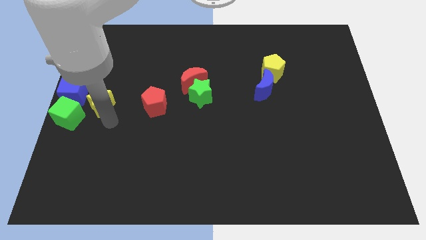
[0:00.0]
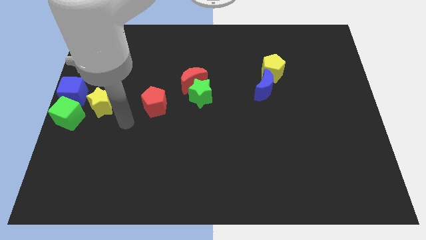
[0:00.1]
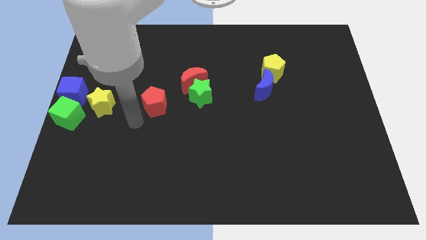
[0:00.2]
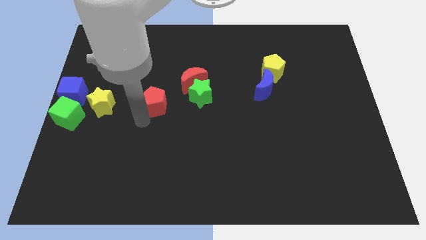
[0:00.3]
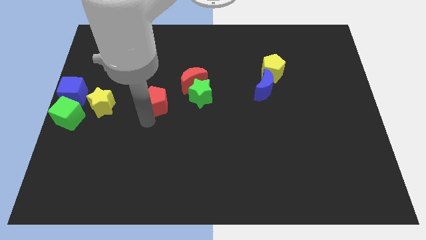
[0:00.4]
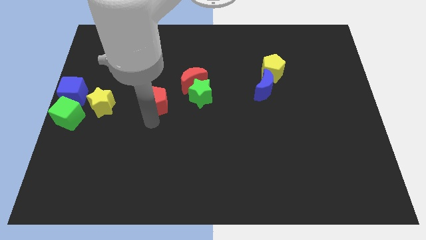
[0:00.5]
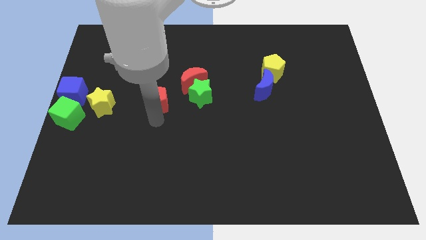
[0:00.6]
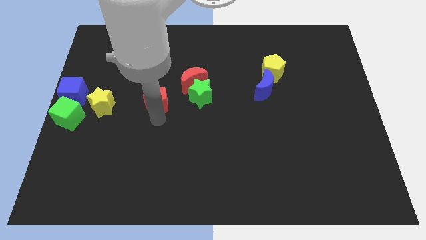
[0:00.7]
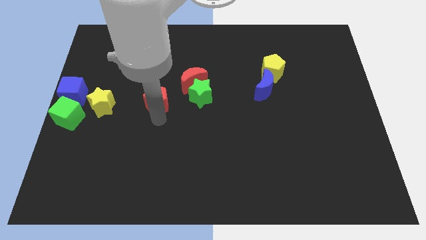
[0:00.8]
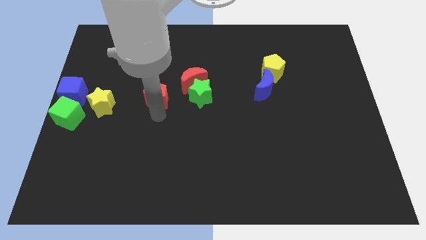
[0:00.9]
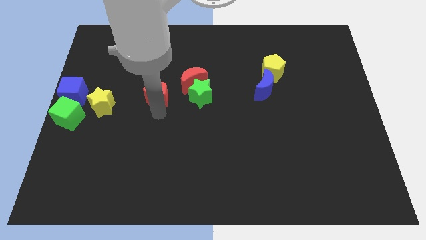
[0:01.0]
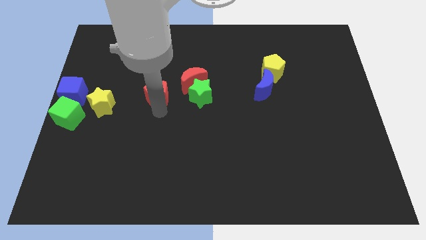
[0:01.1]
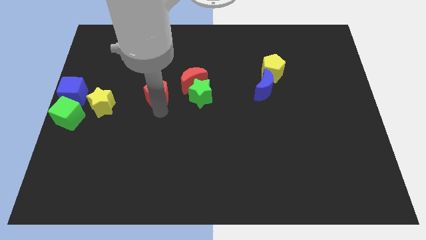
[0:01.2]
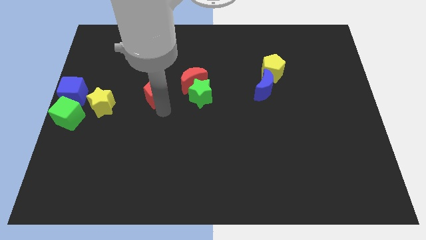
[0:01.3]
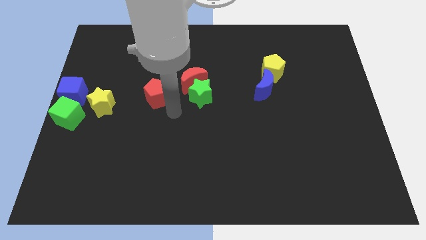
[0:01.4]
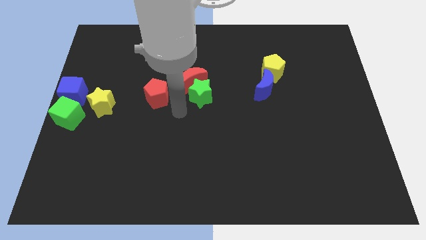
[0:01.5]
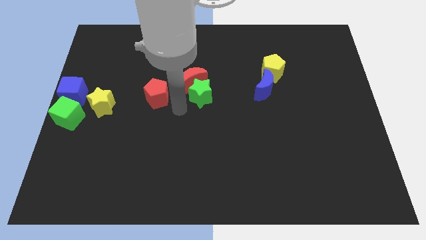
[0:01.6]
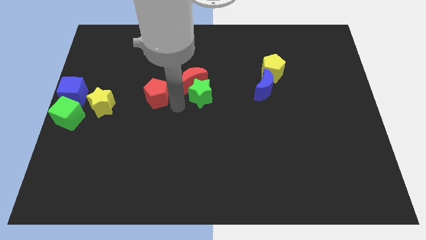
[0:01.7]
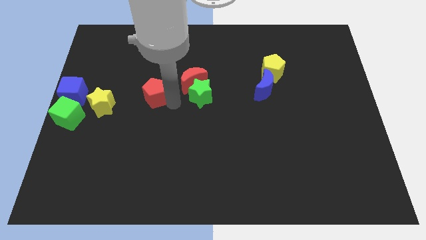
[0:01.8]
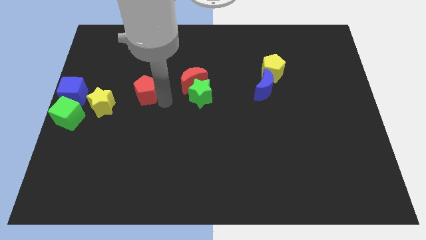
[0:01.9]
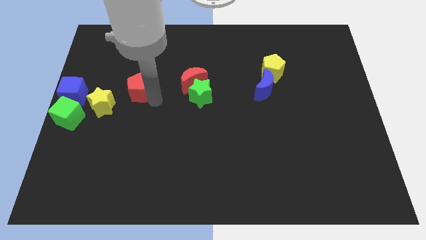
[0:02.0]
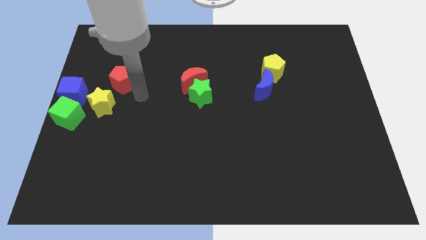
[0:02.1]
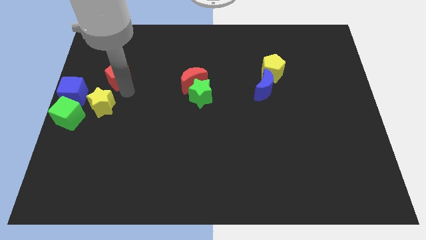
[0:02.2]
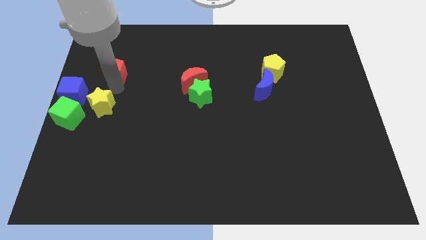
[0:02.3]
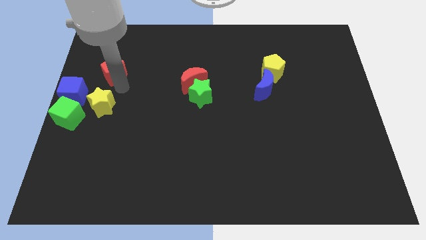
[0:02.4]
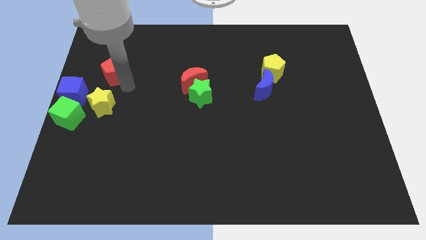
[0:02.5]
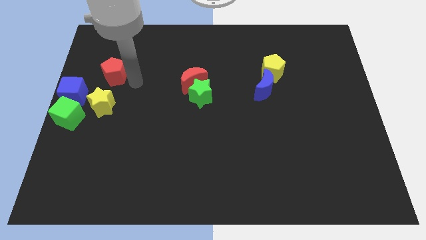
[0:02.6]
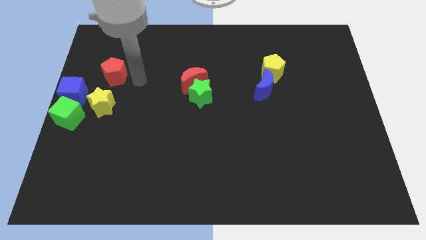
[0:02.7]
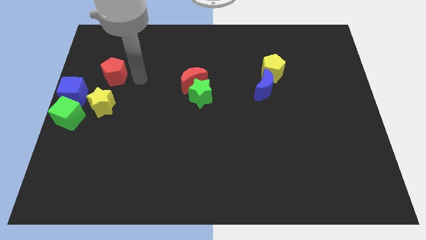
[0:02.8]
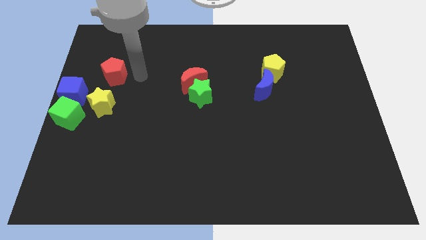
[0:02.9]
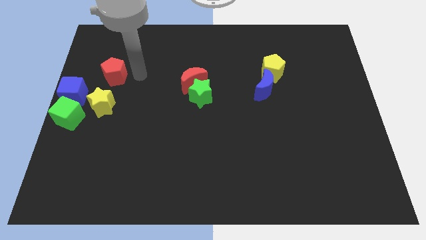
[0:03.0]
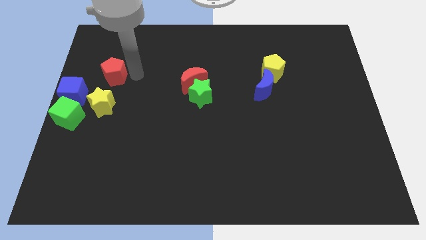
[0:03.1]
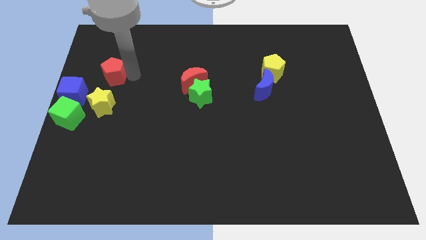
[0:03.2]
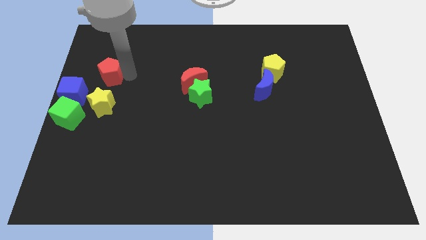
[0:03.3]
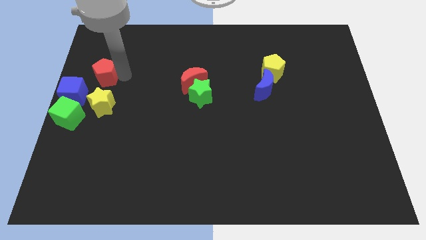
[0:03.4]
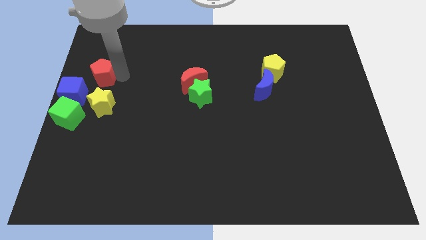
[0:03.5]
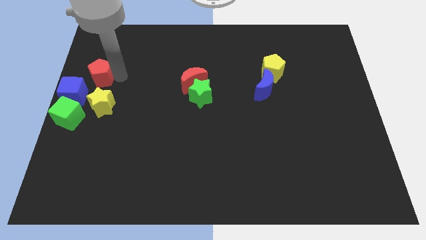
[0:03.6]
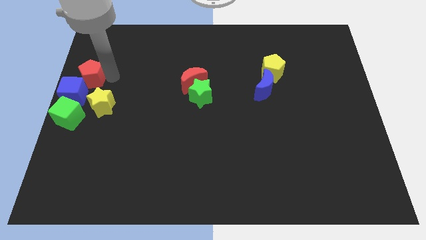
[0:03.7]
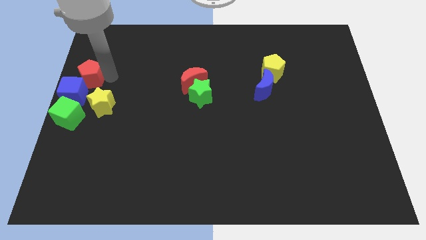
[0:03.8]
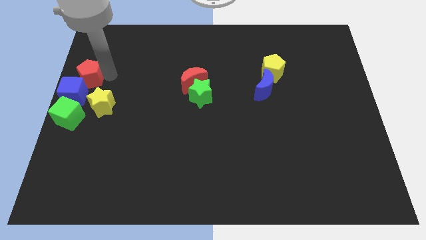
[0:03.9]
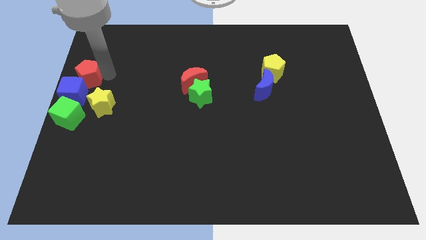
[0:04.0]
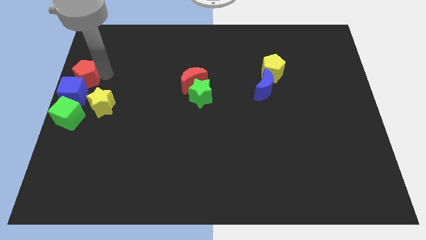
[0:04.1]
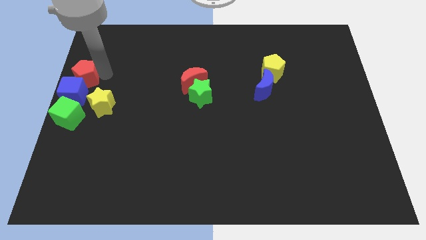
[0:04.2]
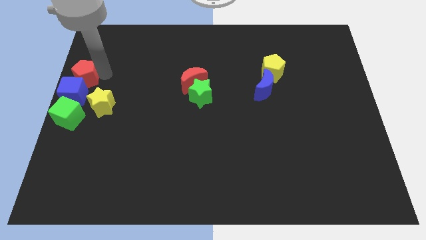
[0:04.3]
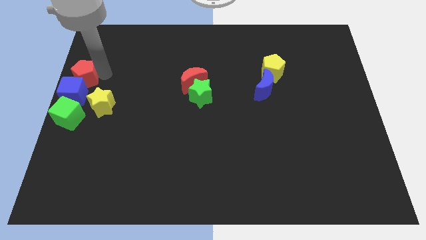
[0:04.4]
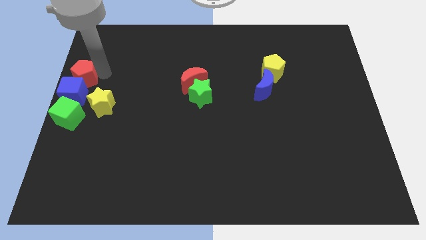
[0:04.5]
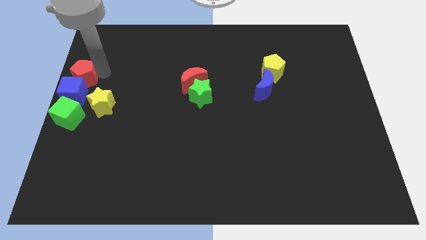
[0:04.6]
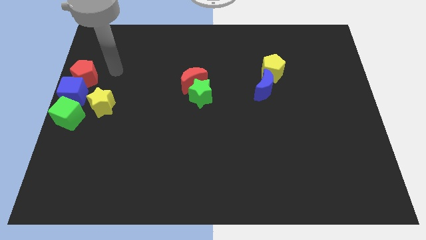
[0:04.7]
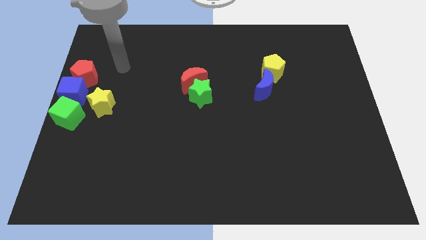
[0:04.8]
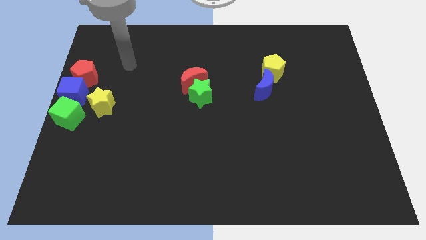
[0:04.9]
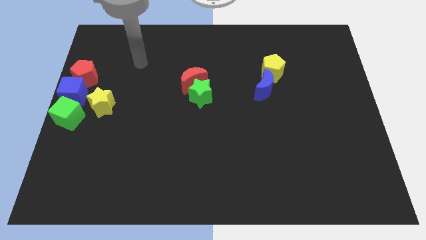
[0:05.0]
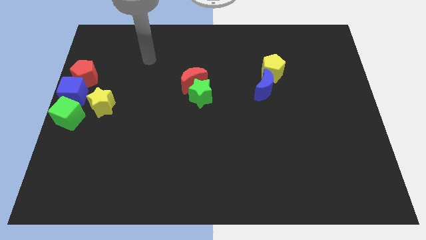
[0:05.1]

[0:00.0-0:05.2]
place the red pentagon at the top of the blue cube

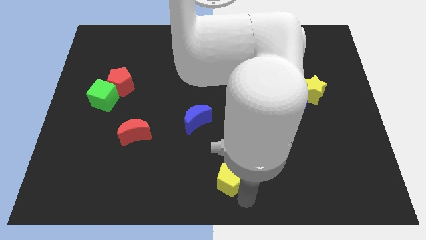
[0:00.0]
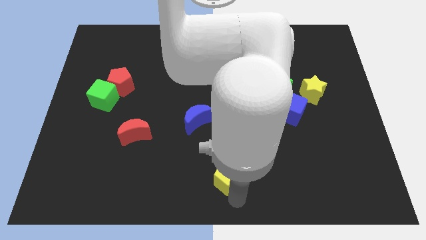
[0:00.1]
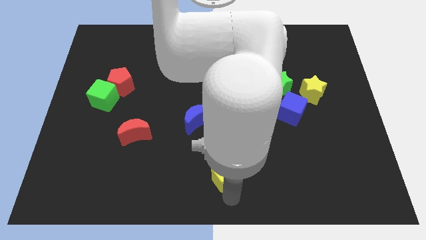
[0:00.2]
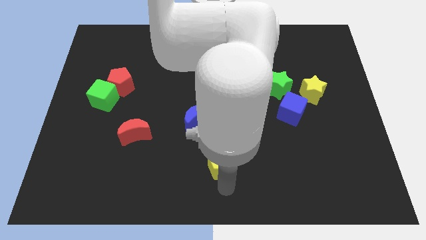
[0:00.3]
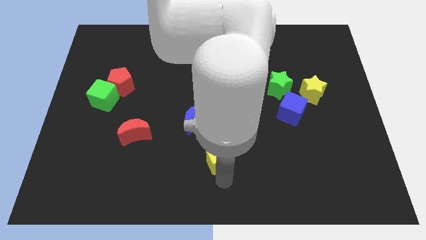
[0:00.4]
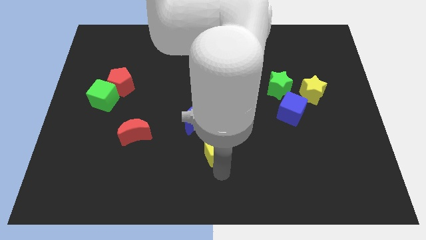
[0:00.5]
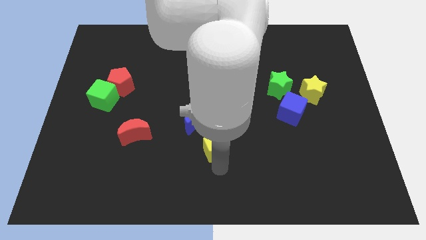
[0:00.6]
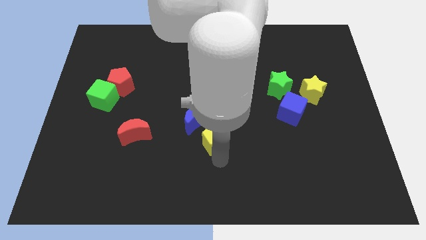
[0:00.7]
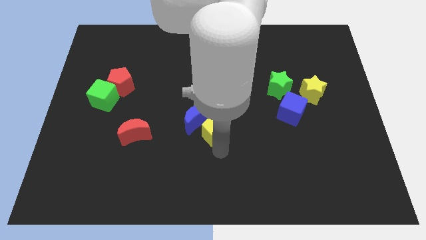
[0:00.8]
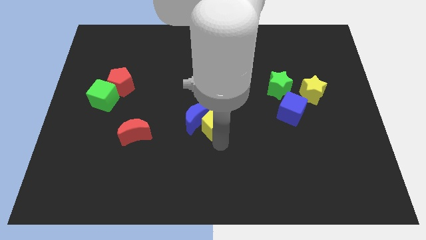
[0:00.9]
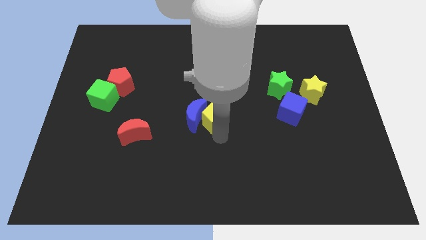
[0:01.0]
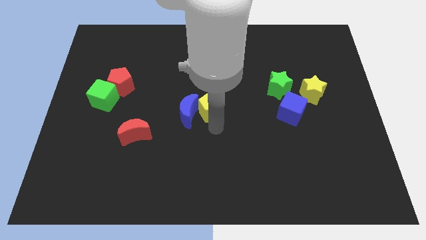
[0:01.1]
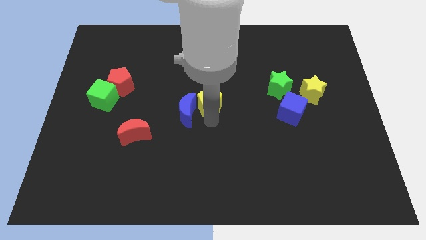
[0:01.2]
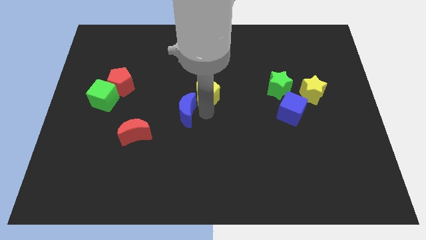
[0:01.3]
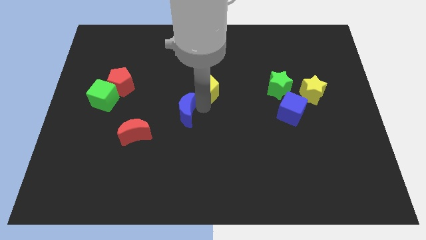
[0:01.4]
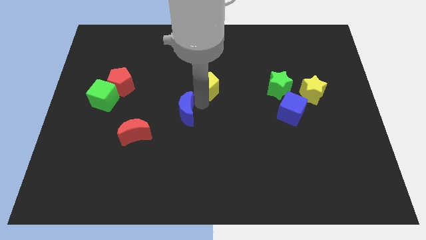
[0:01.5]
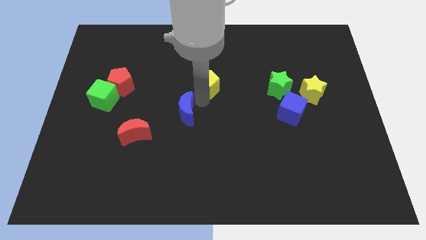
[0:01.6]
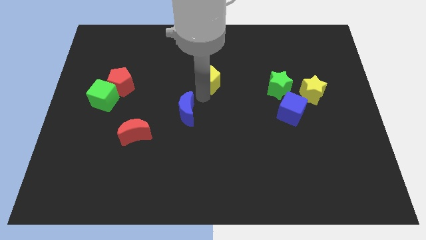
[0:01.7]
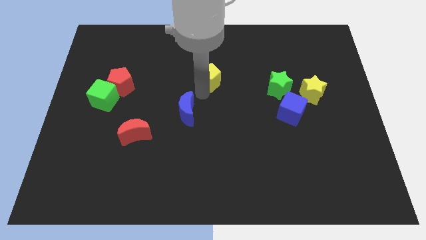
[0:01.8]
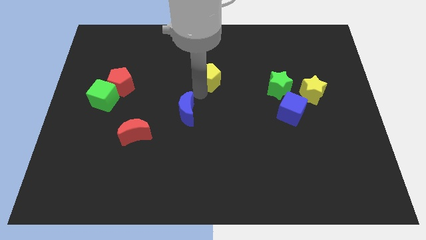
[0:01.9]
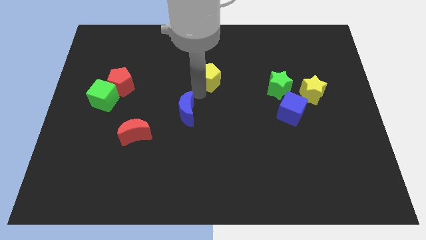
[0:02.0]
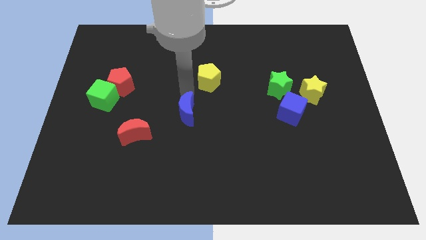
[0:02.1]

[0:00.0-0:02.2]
move the yellow pentagon to the to the top of the board

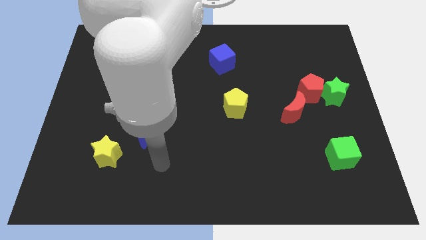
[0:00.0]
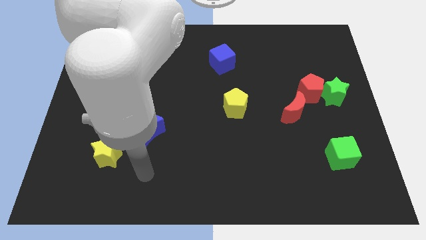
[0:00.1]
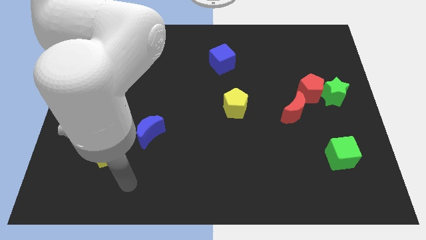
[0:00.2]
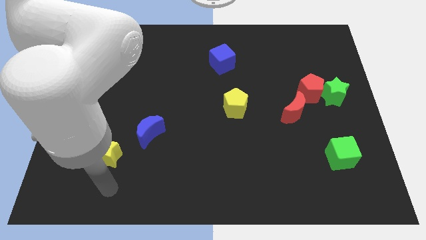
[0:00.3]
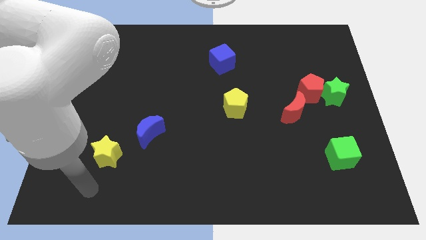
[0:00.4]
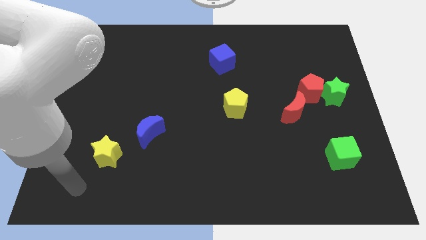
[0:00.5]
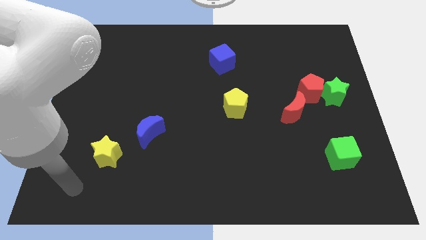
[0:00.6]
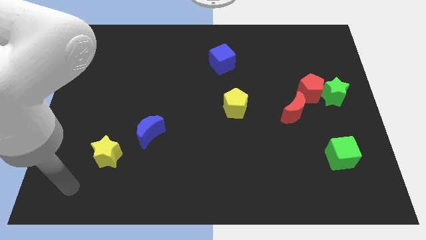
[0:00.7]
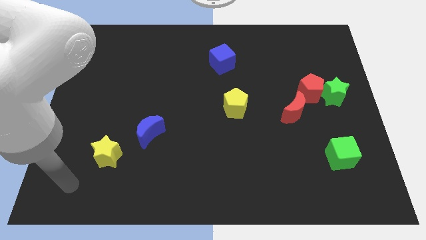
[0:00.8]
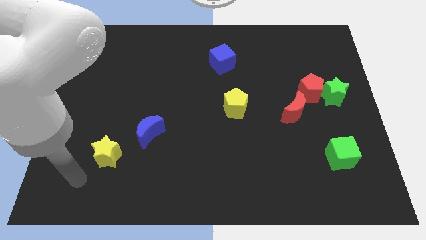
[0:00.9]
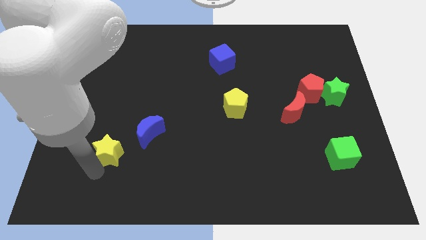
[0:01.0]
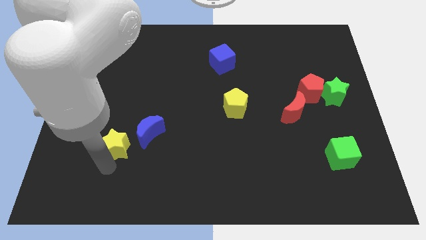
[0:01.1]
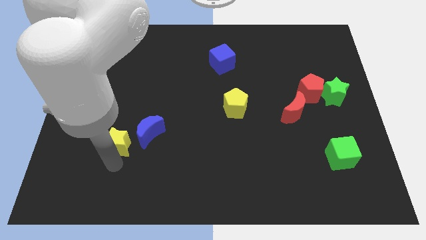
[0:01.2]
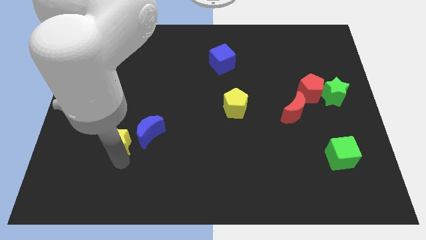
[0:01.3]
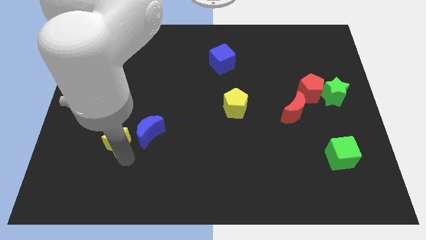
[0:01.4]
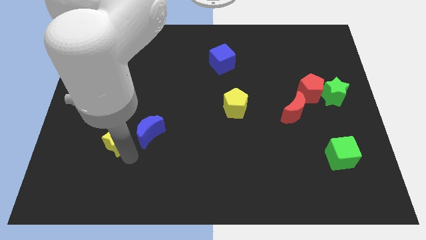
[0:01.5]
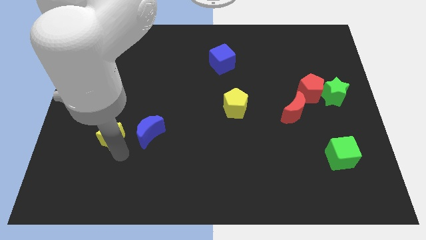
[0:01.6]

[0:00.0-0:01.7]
push yellow star to the left side of the blue crescent
